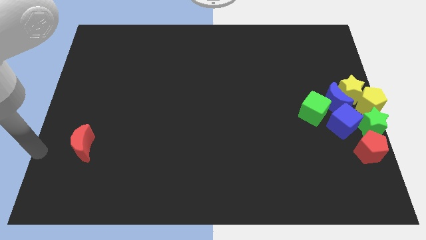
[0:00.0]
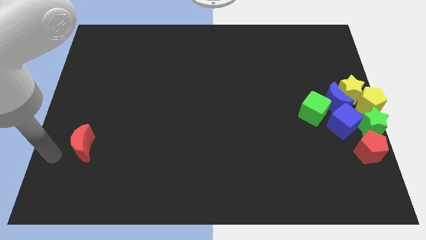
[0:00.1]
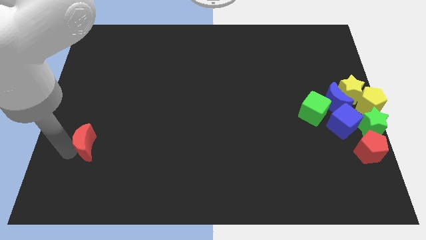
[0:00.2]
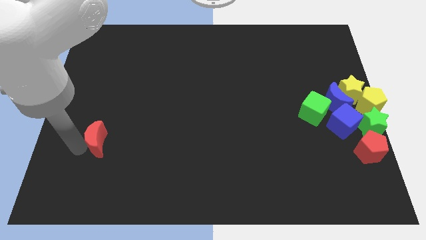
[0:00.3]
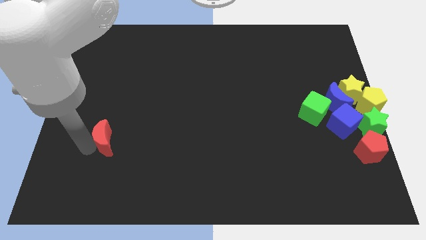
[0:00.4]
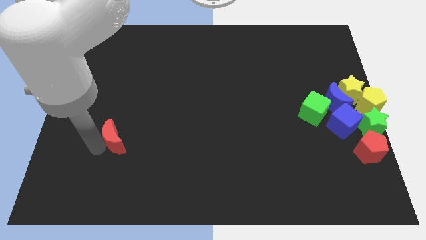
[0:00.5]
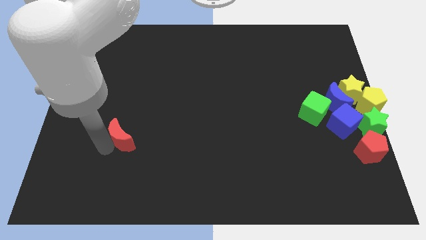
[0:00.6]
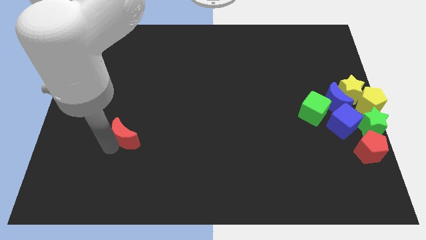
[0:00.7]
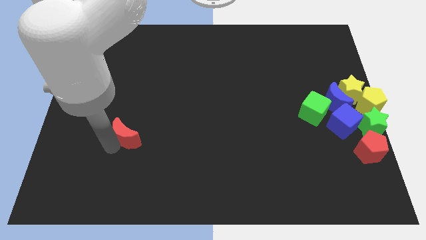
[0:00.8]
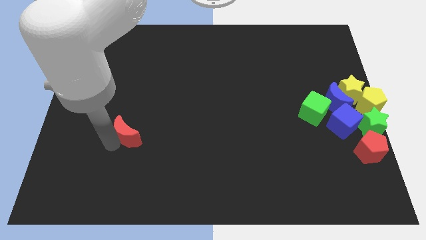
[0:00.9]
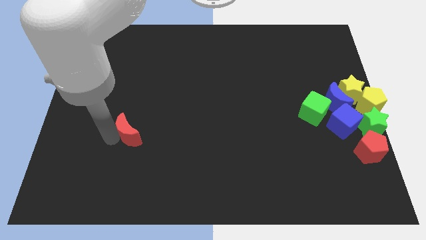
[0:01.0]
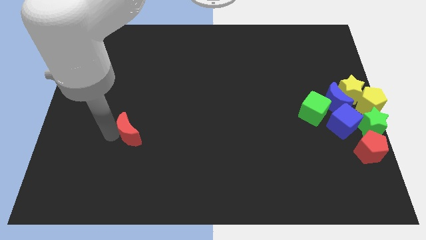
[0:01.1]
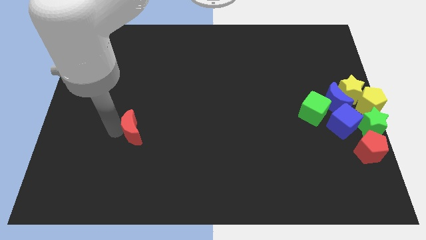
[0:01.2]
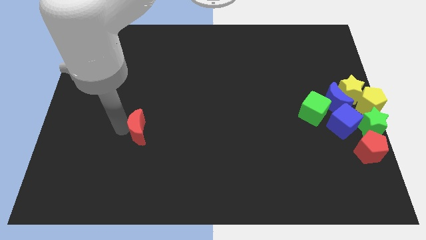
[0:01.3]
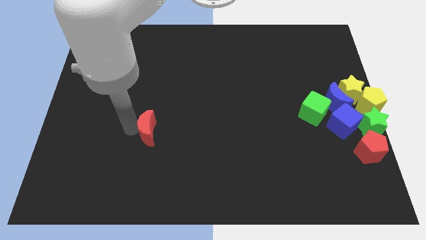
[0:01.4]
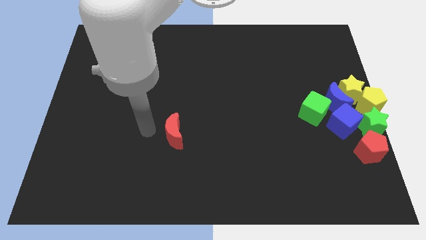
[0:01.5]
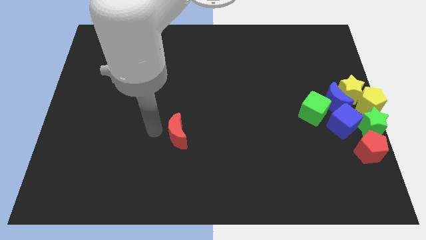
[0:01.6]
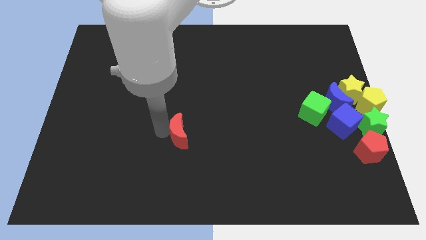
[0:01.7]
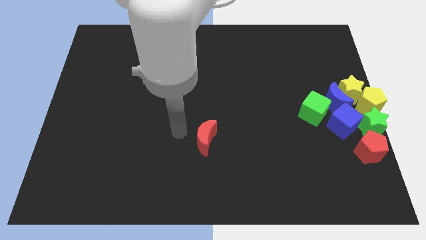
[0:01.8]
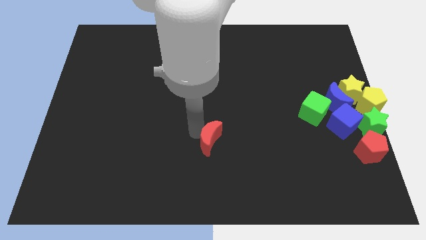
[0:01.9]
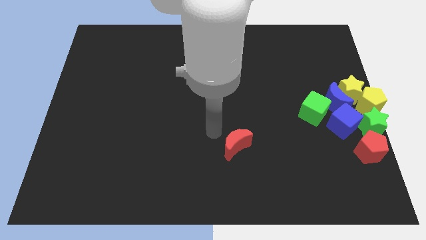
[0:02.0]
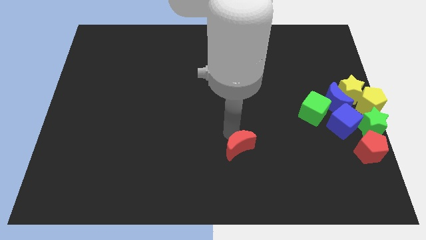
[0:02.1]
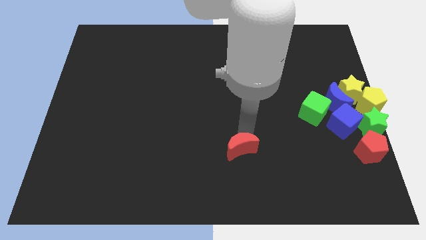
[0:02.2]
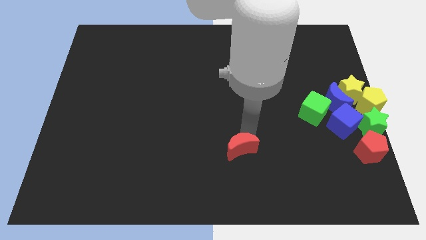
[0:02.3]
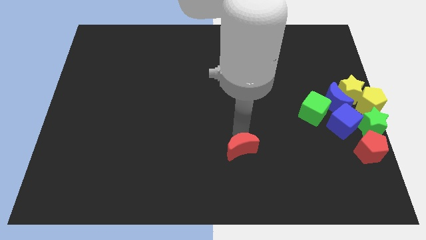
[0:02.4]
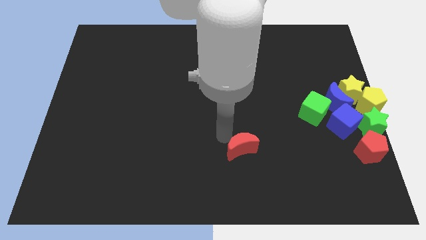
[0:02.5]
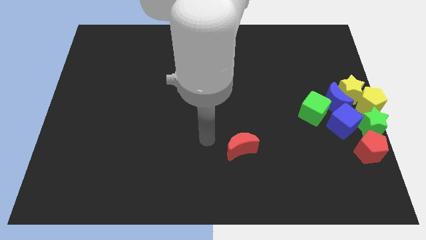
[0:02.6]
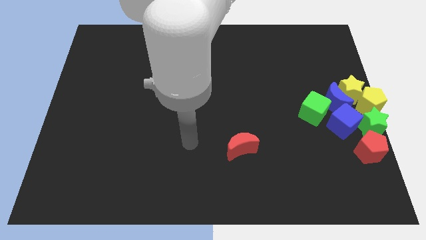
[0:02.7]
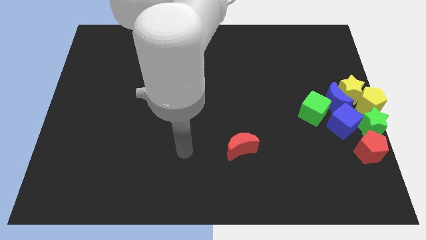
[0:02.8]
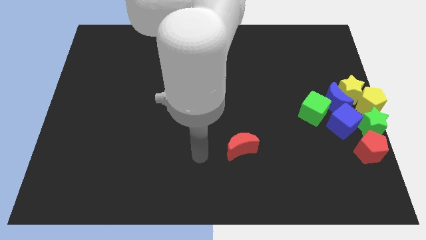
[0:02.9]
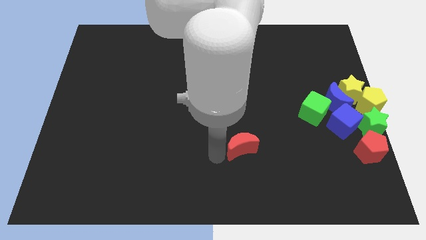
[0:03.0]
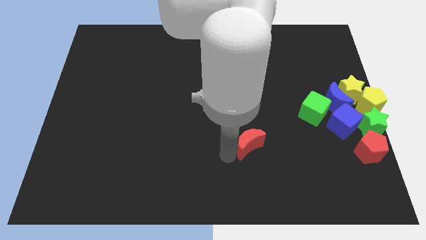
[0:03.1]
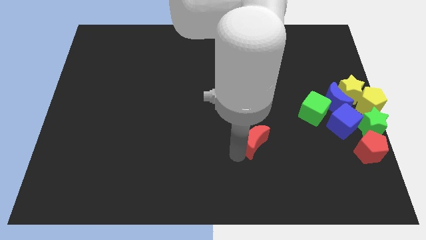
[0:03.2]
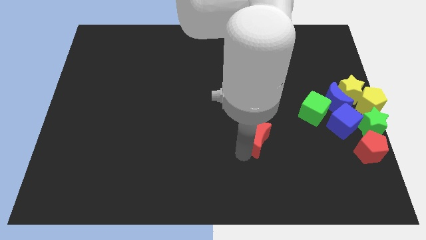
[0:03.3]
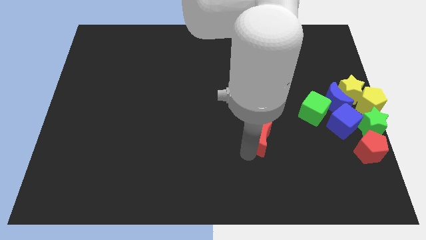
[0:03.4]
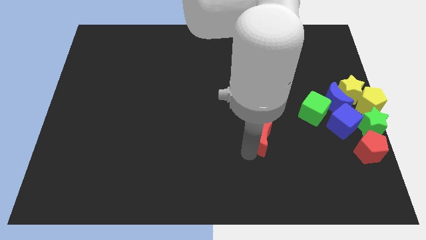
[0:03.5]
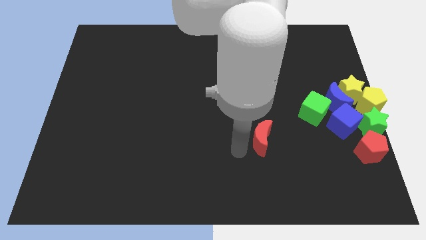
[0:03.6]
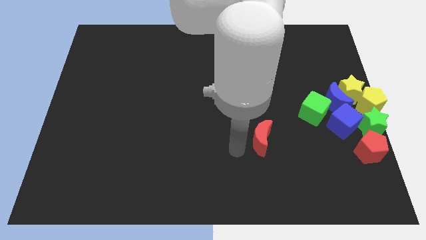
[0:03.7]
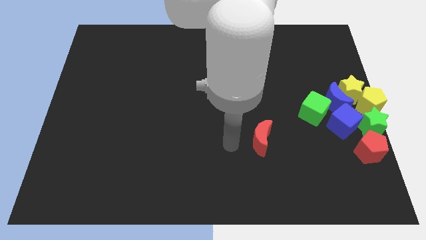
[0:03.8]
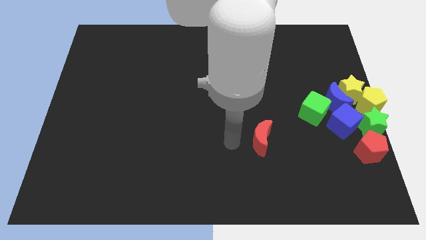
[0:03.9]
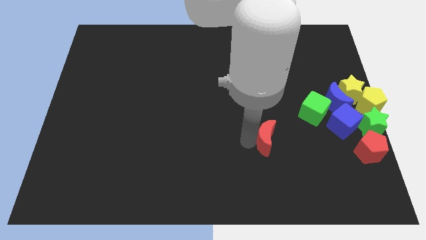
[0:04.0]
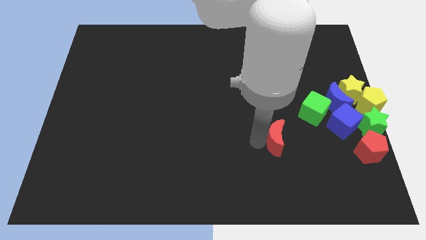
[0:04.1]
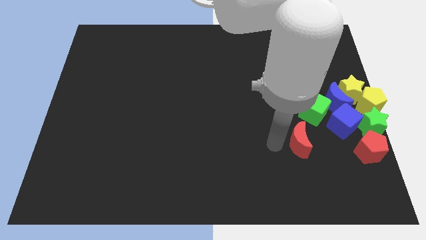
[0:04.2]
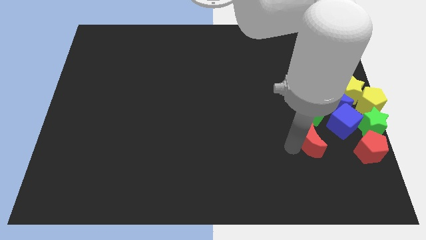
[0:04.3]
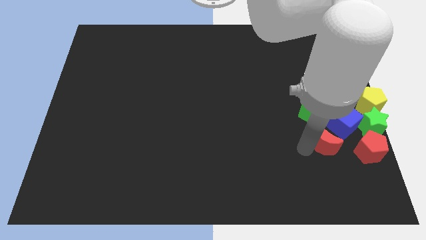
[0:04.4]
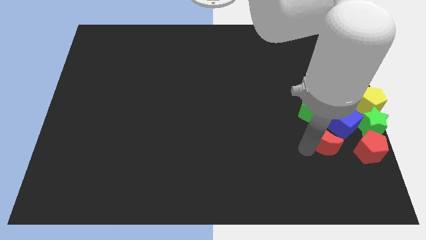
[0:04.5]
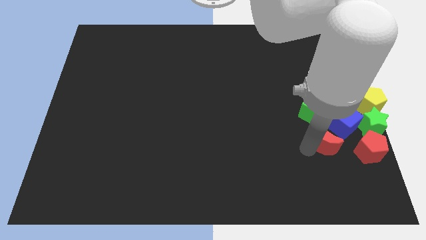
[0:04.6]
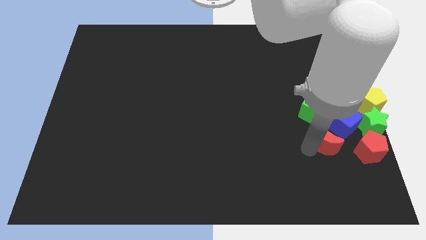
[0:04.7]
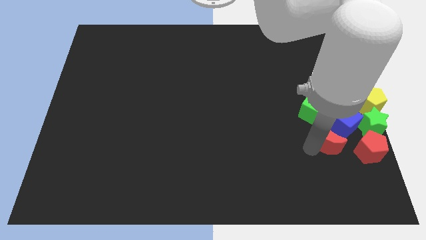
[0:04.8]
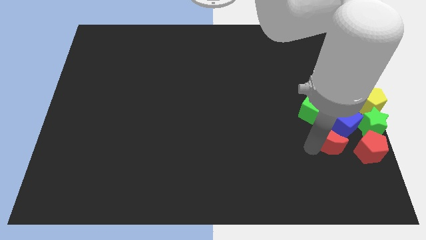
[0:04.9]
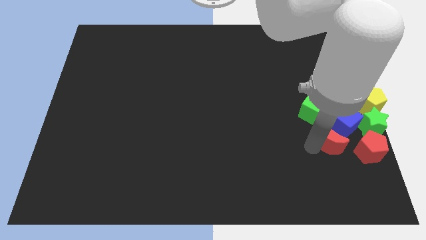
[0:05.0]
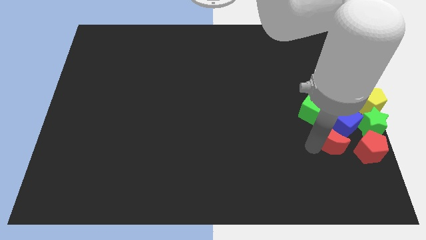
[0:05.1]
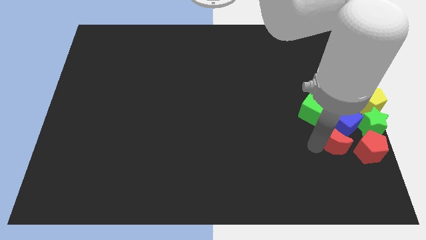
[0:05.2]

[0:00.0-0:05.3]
move the red moon close to blue cube

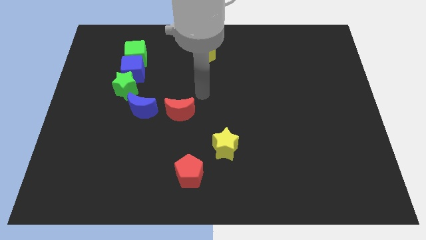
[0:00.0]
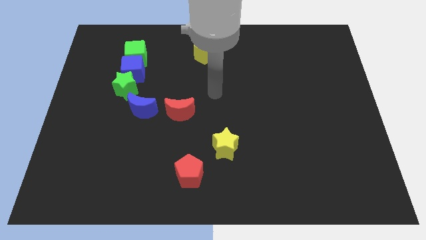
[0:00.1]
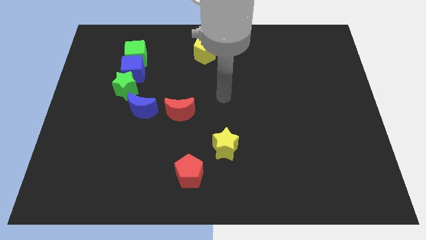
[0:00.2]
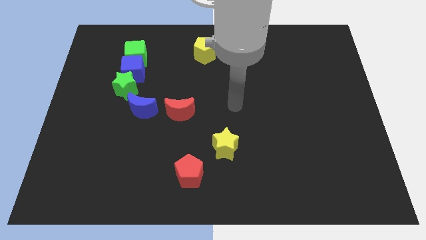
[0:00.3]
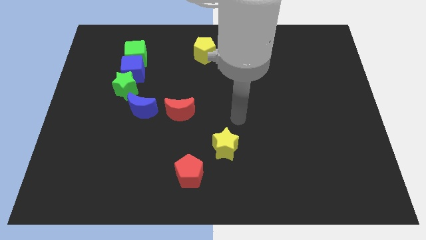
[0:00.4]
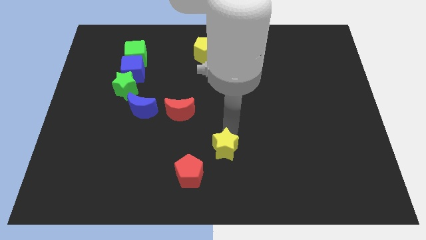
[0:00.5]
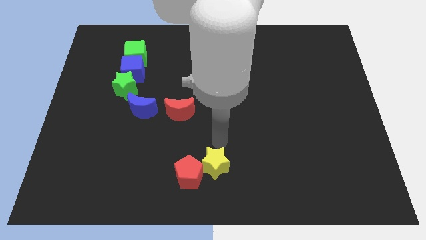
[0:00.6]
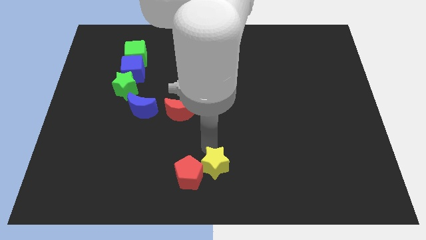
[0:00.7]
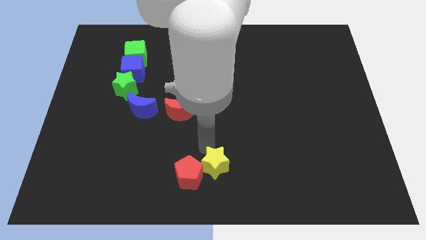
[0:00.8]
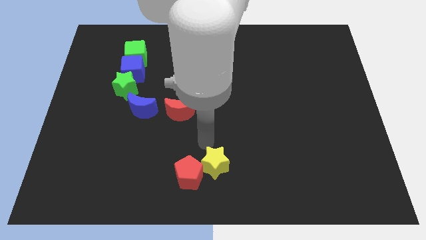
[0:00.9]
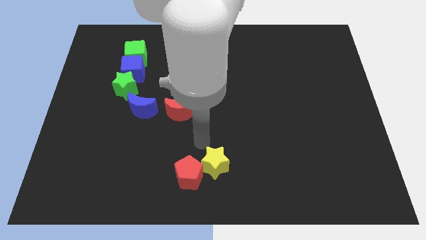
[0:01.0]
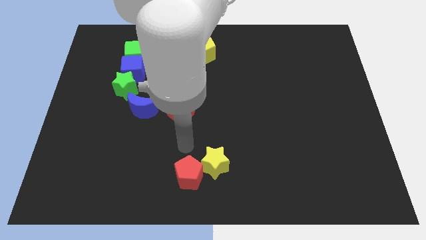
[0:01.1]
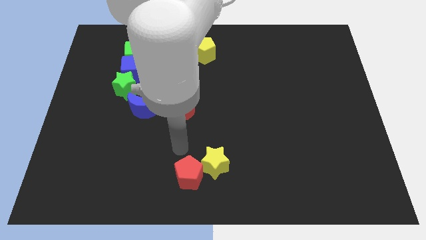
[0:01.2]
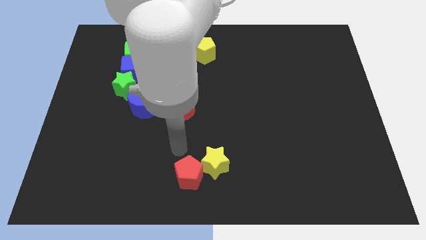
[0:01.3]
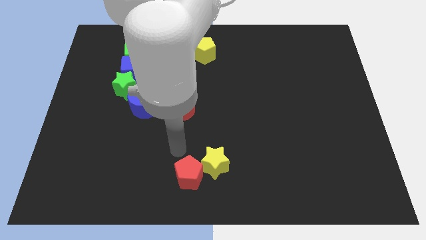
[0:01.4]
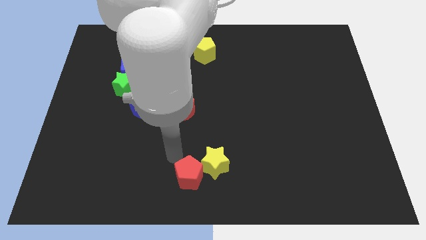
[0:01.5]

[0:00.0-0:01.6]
push the yellow star into the red pentagon

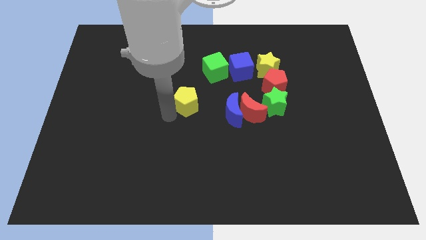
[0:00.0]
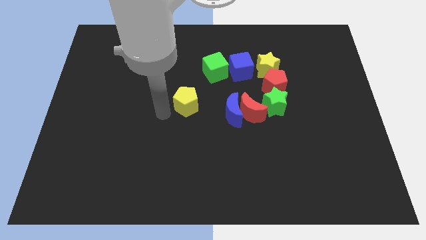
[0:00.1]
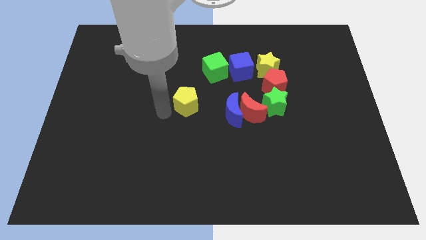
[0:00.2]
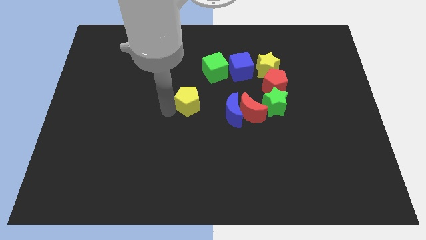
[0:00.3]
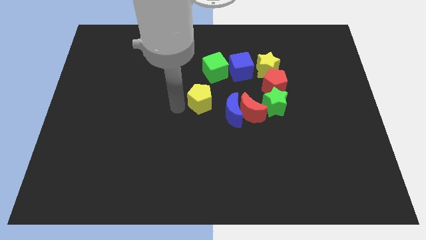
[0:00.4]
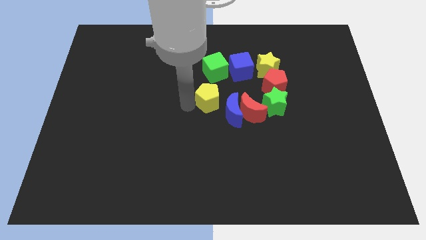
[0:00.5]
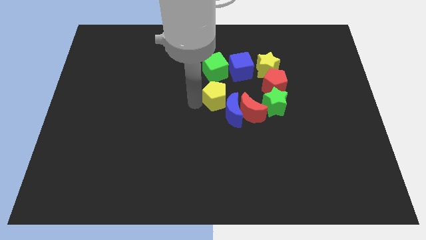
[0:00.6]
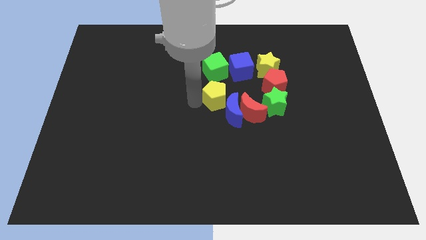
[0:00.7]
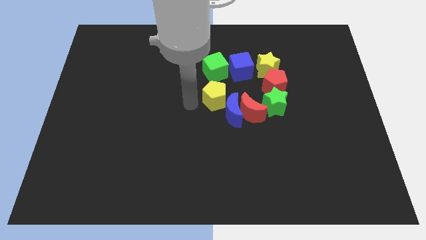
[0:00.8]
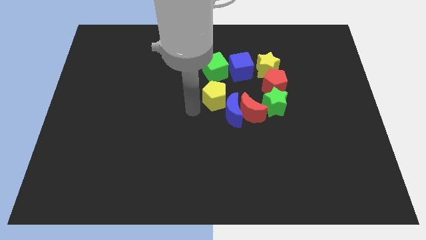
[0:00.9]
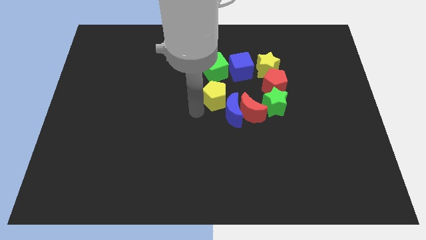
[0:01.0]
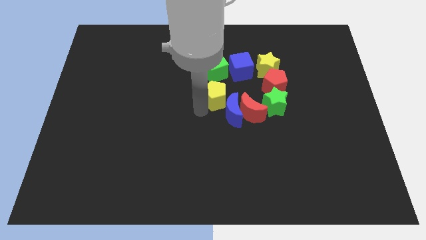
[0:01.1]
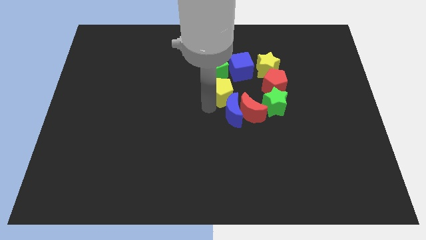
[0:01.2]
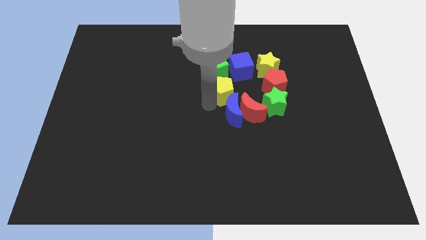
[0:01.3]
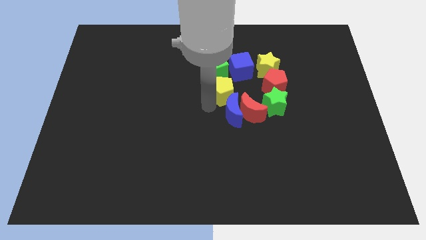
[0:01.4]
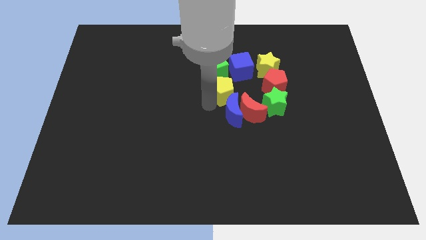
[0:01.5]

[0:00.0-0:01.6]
push the yellow pentagon in between the green cube and blue crescent

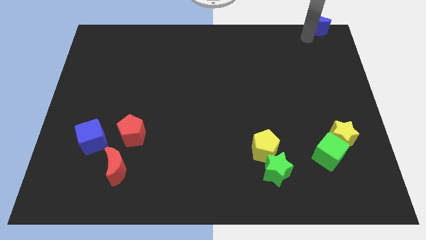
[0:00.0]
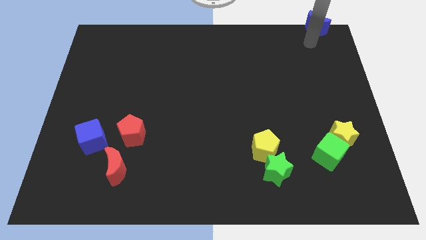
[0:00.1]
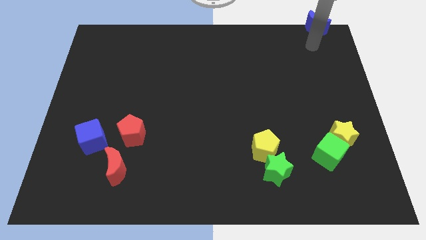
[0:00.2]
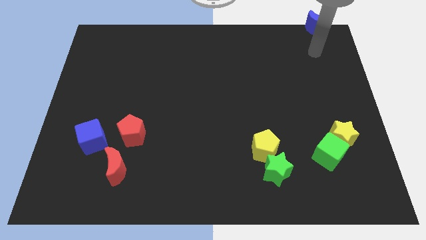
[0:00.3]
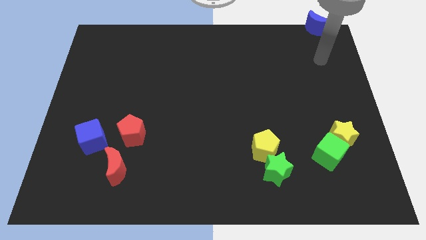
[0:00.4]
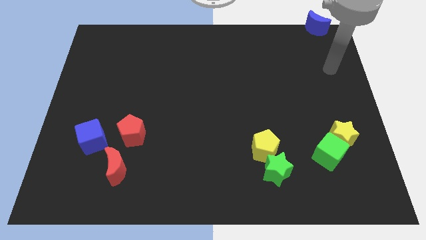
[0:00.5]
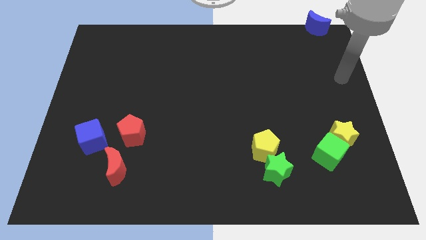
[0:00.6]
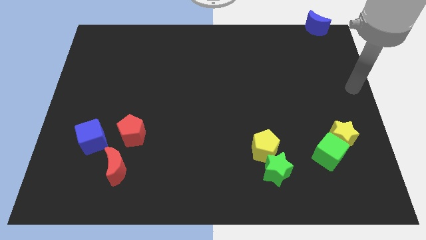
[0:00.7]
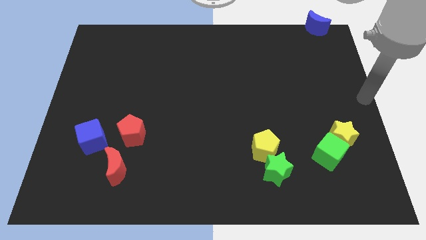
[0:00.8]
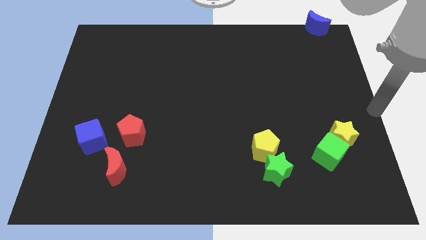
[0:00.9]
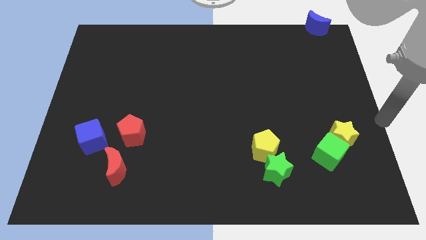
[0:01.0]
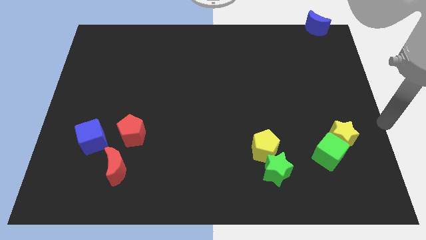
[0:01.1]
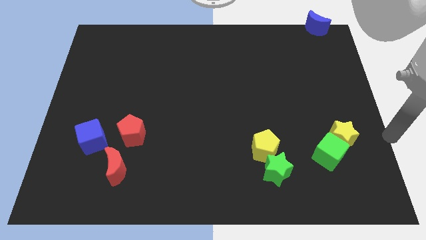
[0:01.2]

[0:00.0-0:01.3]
move your arm towards the bottom right corner of the board
